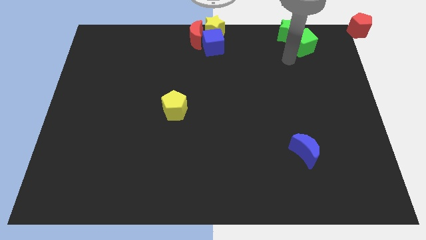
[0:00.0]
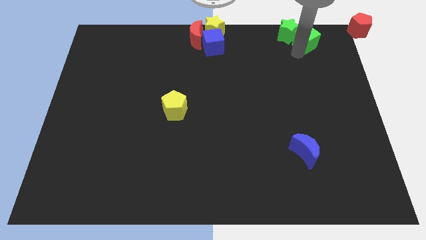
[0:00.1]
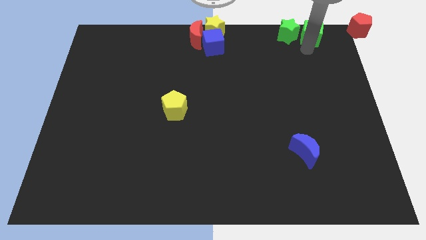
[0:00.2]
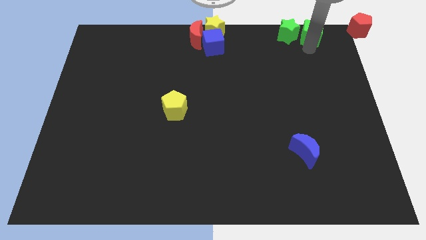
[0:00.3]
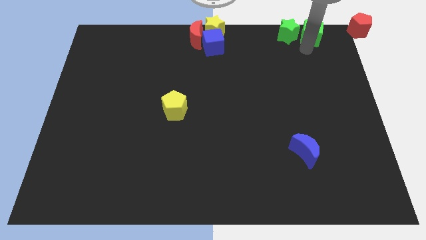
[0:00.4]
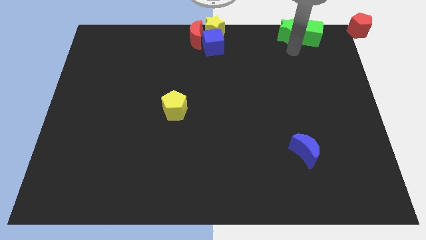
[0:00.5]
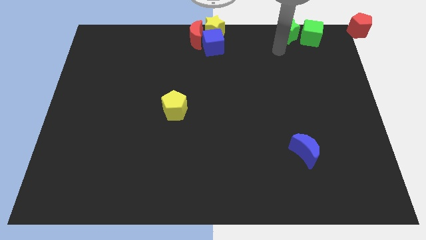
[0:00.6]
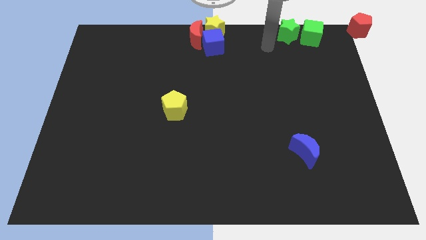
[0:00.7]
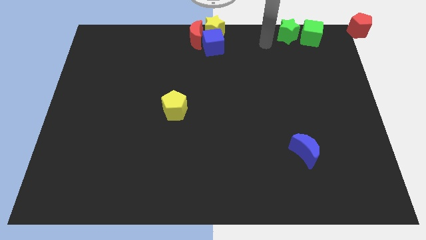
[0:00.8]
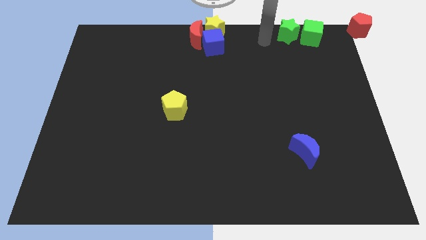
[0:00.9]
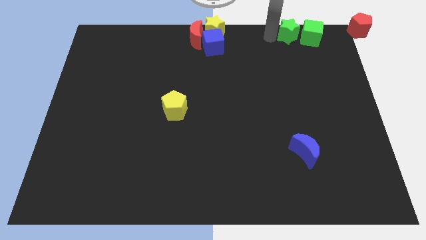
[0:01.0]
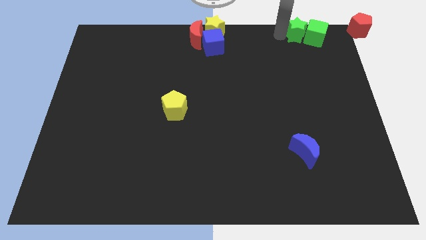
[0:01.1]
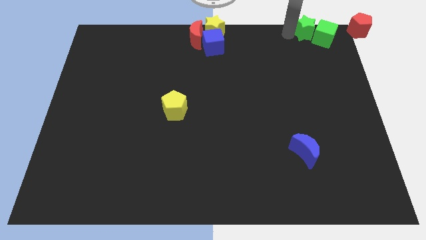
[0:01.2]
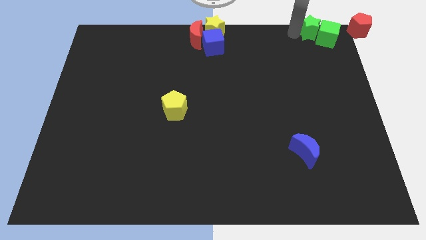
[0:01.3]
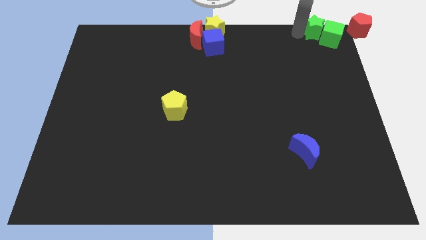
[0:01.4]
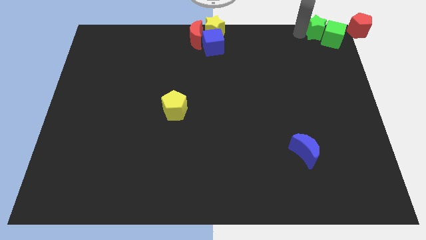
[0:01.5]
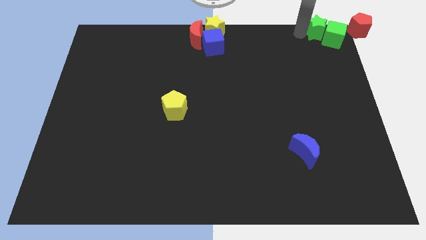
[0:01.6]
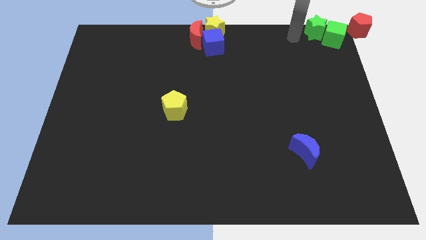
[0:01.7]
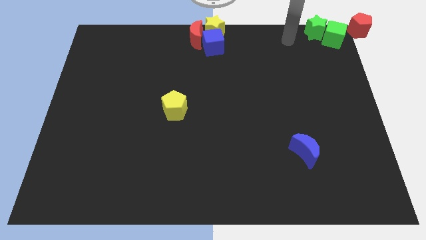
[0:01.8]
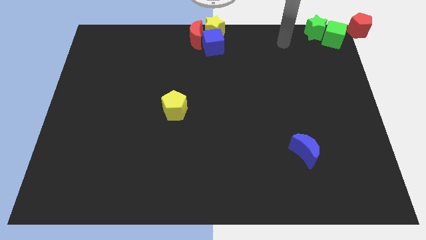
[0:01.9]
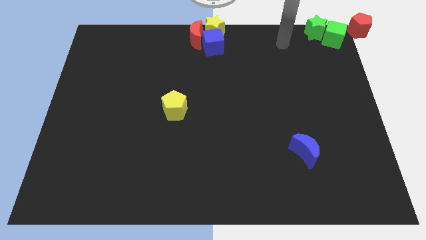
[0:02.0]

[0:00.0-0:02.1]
move the group of green blocks at the top right corner

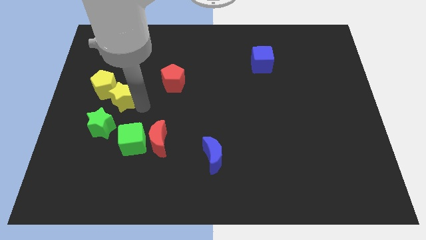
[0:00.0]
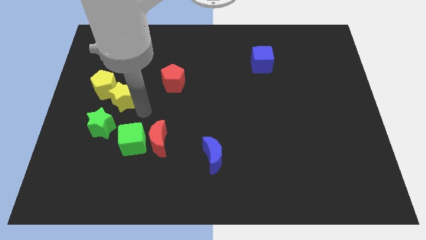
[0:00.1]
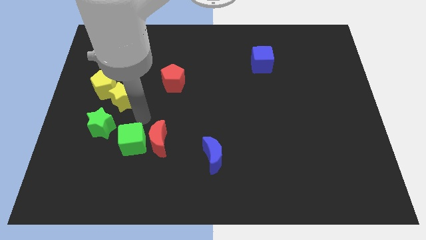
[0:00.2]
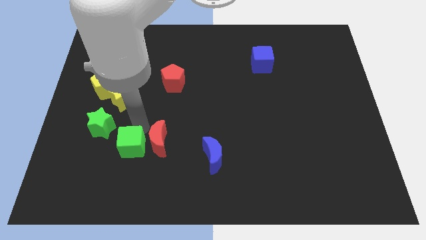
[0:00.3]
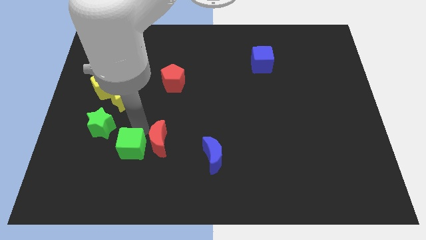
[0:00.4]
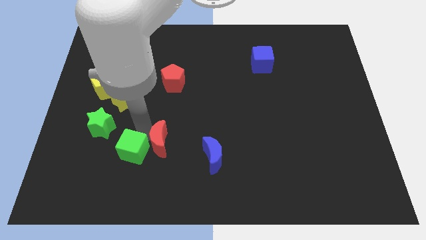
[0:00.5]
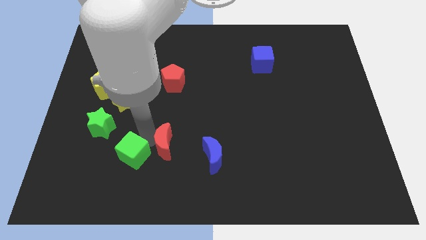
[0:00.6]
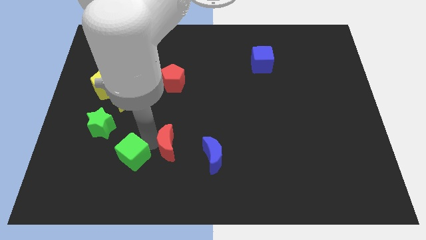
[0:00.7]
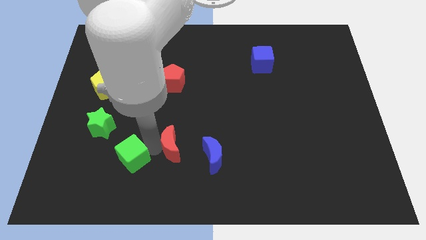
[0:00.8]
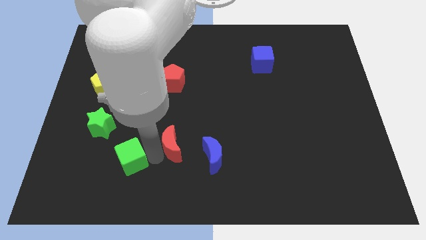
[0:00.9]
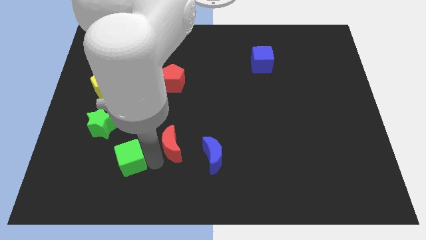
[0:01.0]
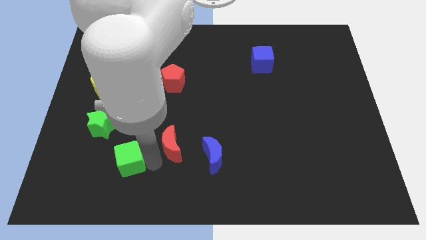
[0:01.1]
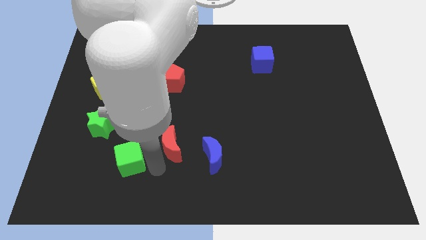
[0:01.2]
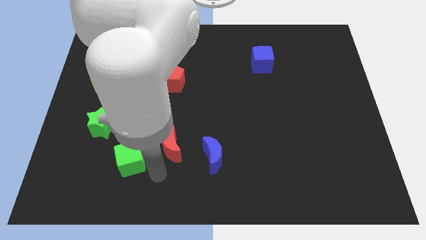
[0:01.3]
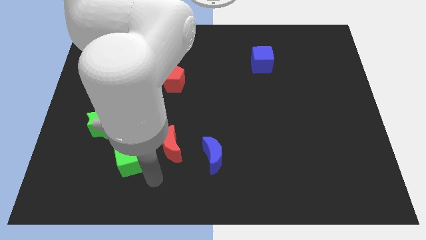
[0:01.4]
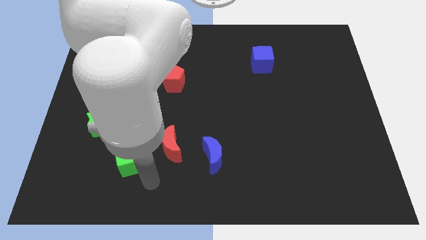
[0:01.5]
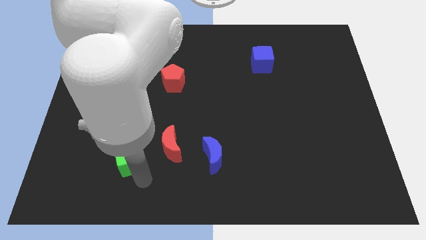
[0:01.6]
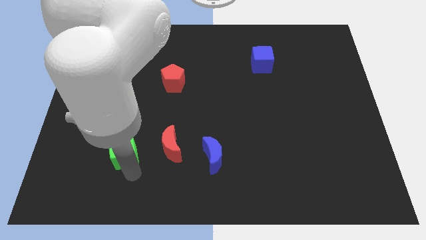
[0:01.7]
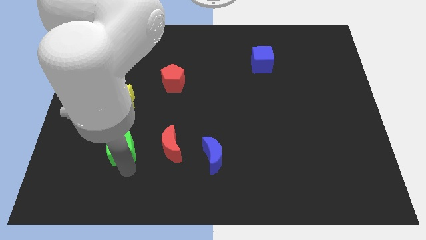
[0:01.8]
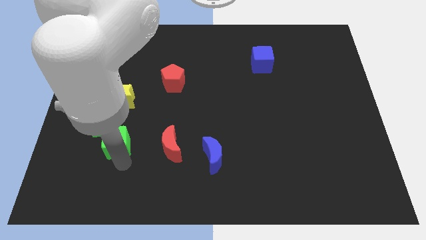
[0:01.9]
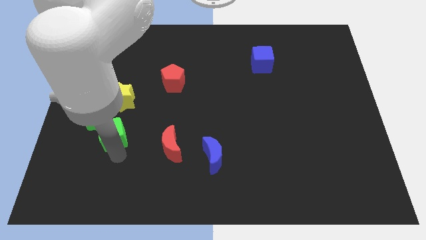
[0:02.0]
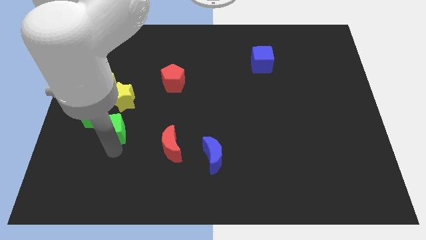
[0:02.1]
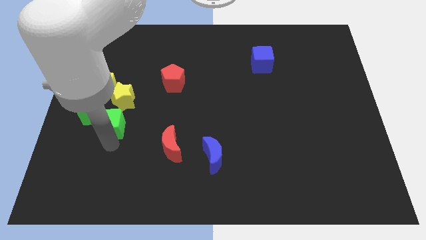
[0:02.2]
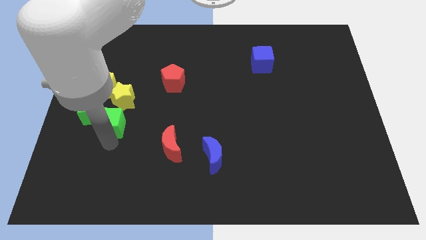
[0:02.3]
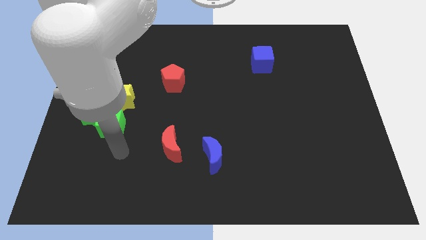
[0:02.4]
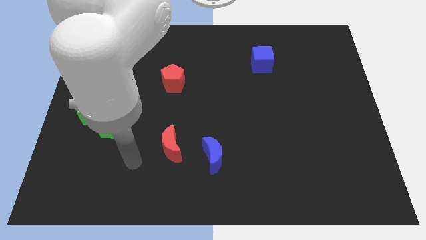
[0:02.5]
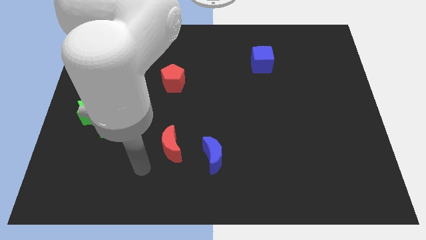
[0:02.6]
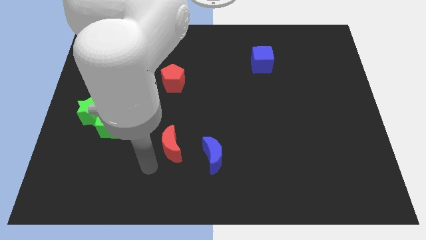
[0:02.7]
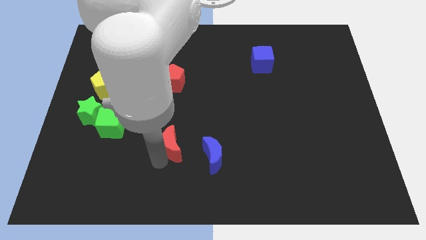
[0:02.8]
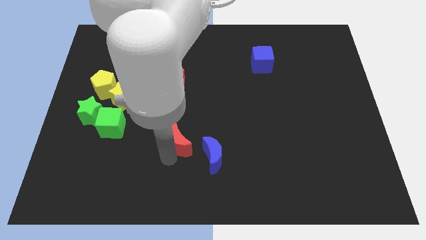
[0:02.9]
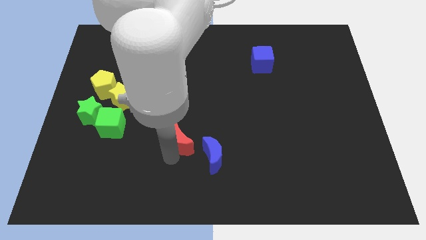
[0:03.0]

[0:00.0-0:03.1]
slide the green star into the green cube

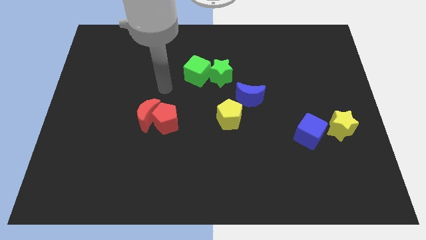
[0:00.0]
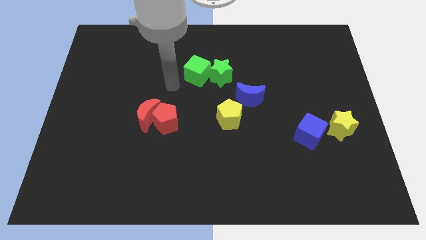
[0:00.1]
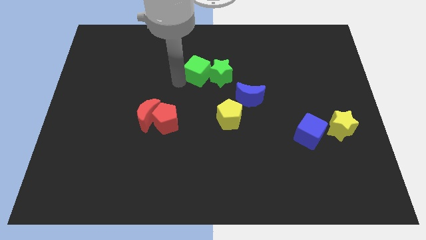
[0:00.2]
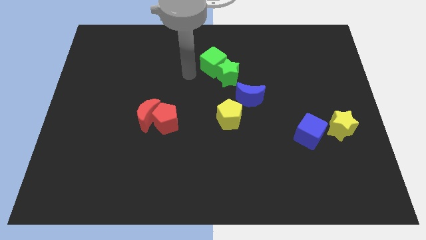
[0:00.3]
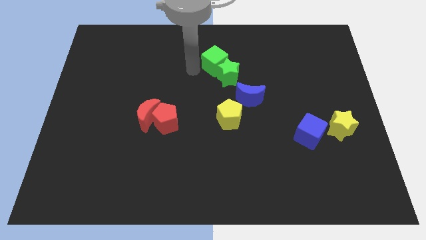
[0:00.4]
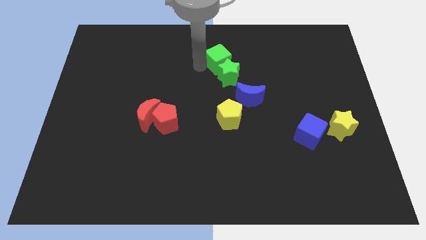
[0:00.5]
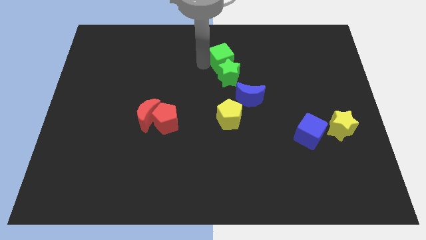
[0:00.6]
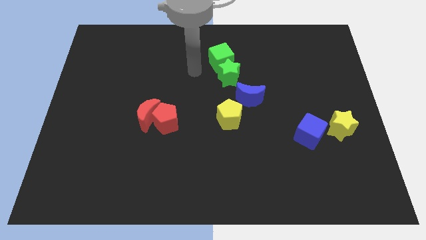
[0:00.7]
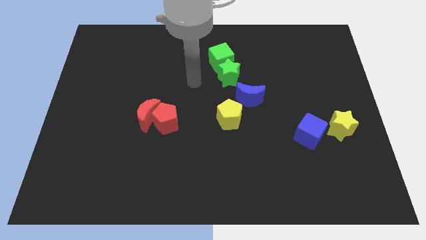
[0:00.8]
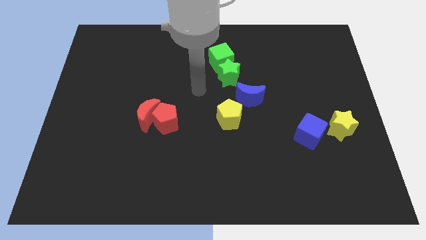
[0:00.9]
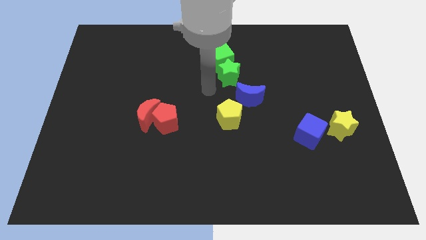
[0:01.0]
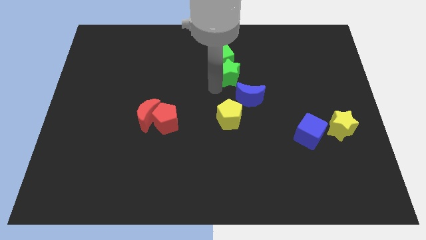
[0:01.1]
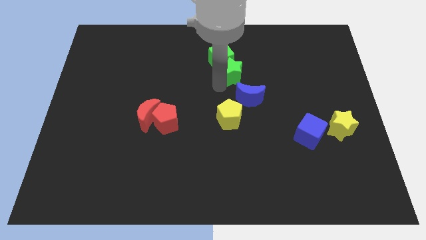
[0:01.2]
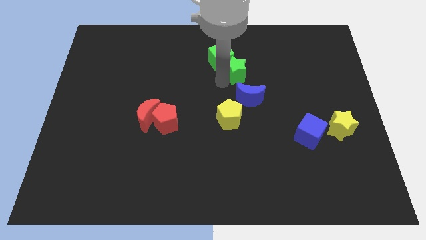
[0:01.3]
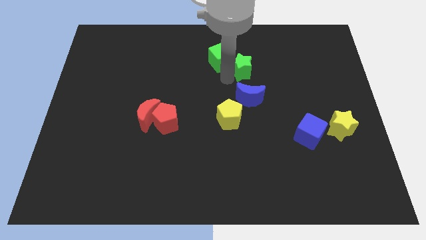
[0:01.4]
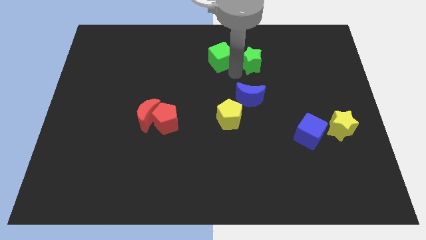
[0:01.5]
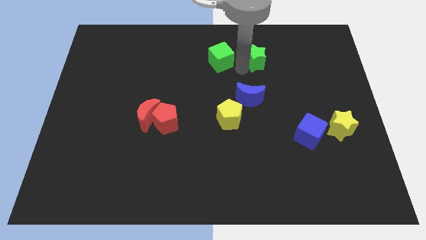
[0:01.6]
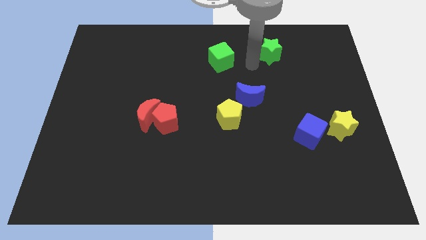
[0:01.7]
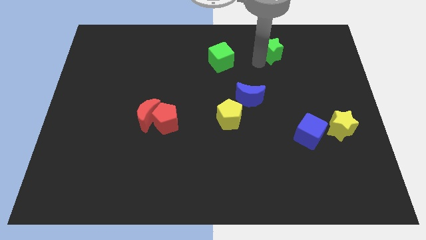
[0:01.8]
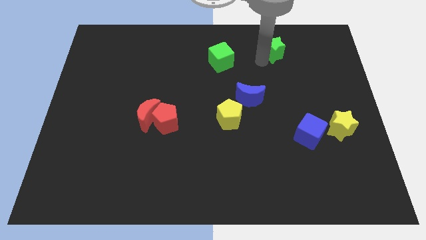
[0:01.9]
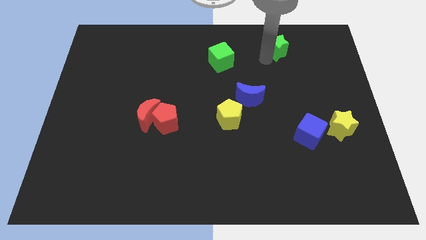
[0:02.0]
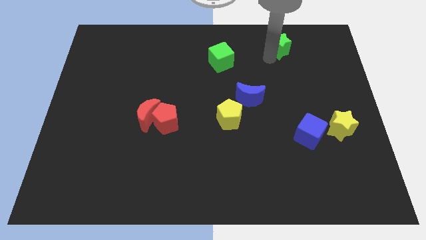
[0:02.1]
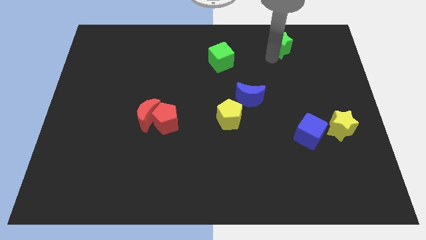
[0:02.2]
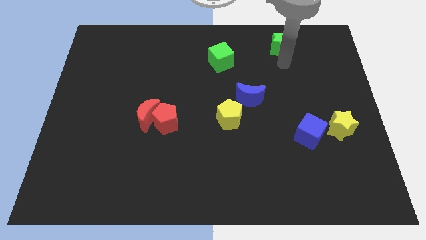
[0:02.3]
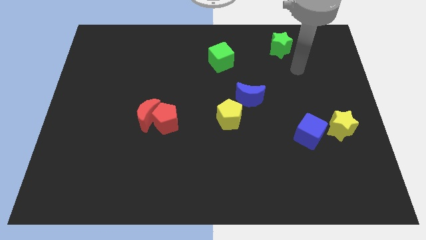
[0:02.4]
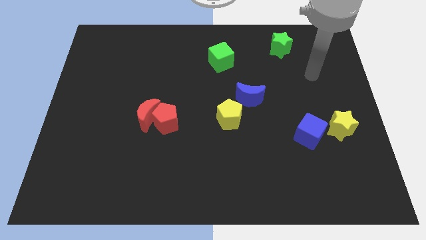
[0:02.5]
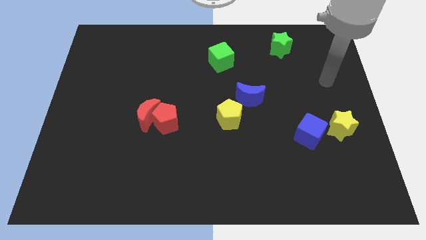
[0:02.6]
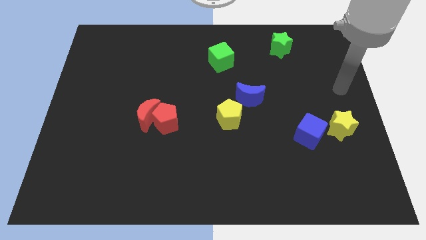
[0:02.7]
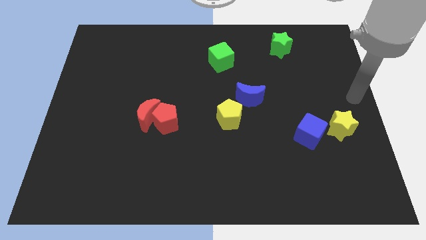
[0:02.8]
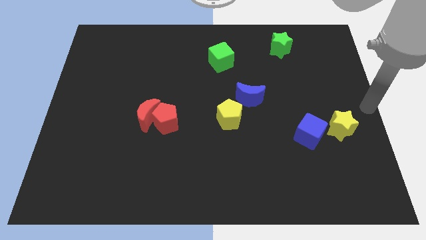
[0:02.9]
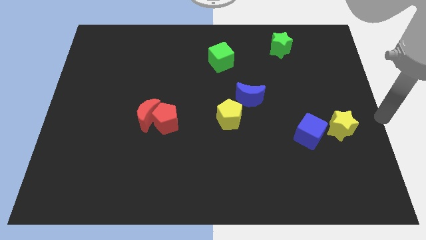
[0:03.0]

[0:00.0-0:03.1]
separate green star from green cube

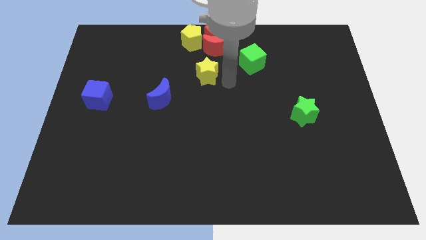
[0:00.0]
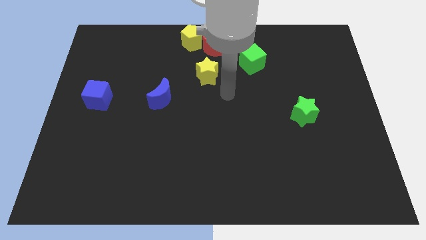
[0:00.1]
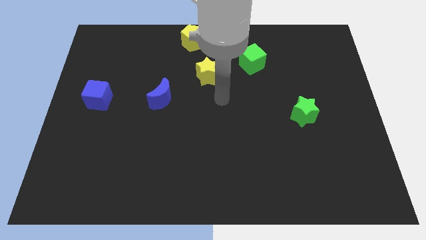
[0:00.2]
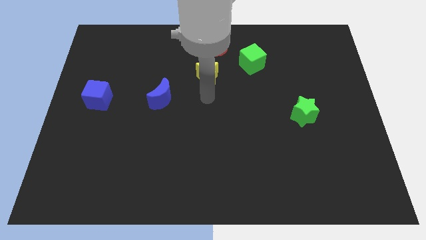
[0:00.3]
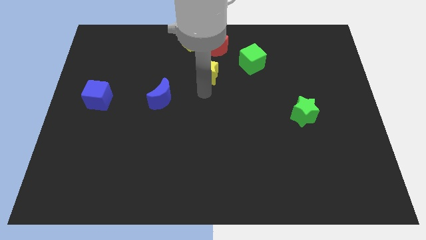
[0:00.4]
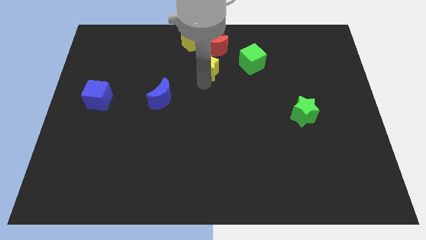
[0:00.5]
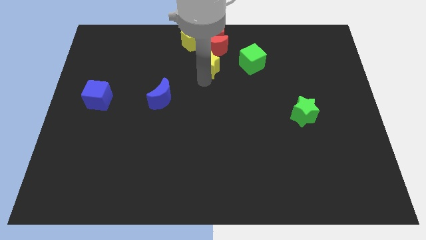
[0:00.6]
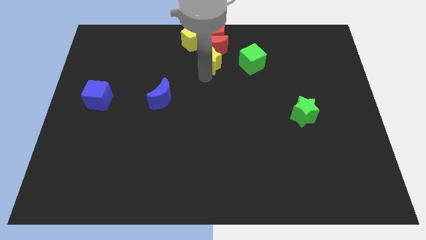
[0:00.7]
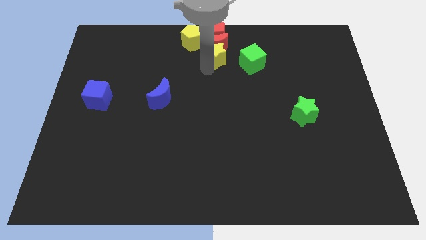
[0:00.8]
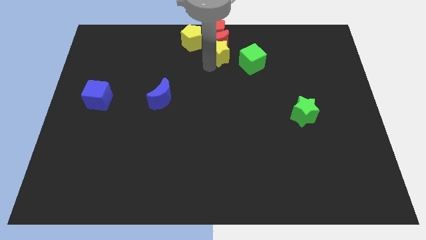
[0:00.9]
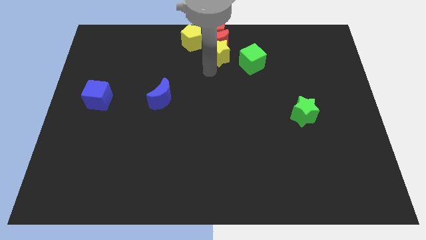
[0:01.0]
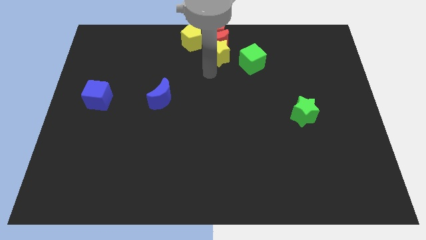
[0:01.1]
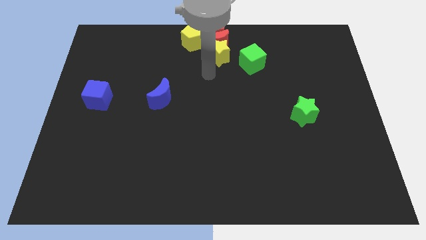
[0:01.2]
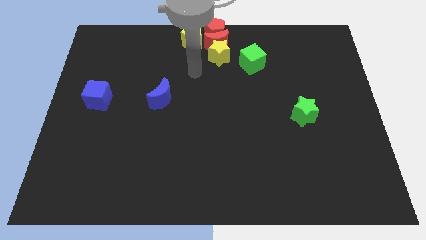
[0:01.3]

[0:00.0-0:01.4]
move yellow star towards the red crescent
